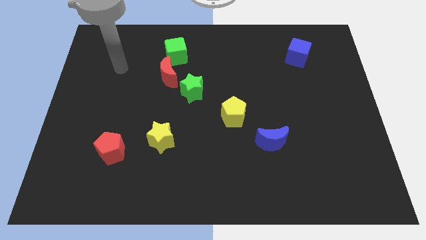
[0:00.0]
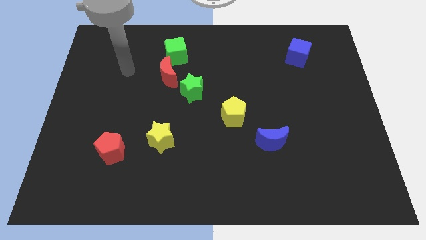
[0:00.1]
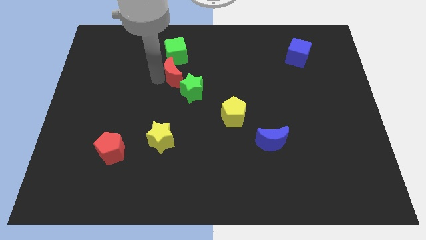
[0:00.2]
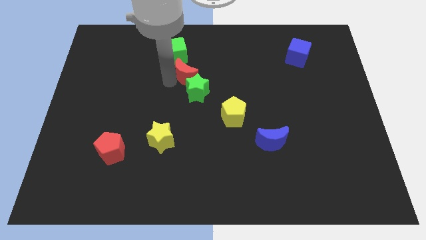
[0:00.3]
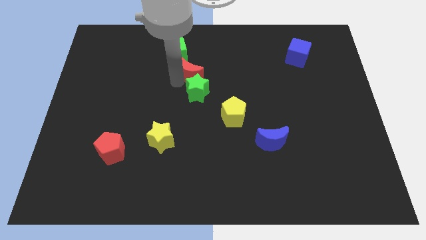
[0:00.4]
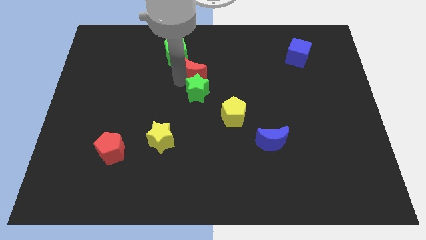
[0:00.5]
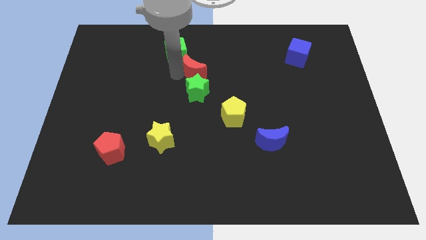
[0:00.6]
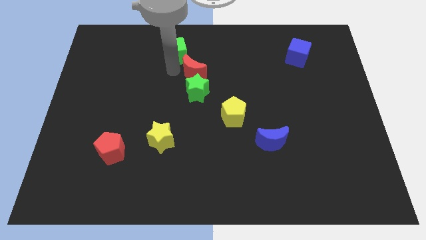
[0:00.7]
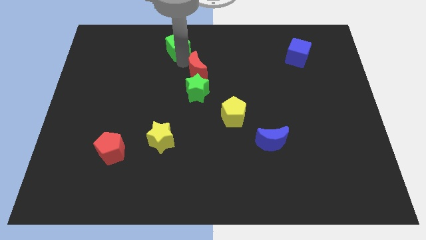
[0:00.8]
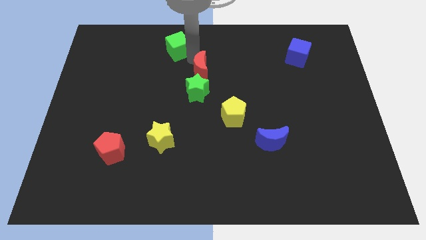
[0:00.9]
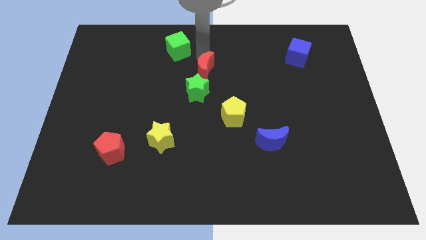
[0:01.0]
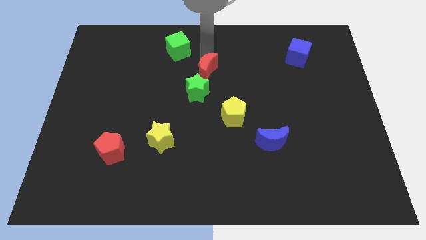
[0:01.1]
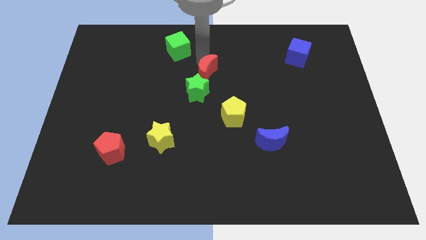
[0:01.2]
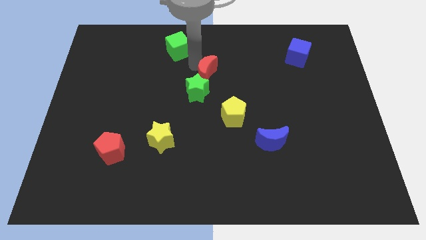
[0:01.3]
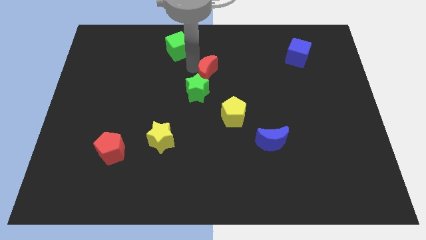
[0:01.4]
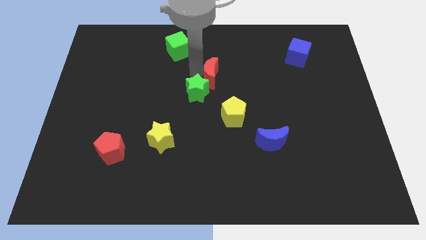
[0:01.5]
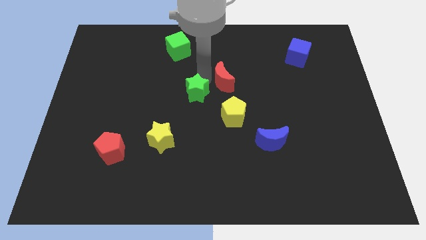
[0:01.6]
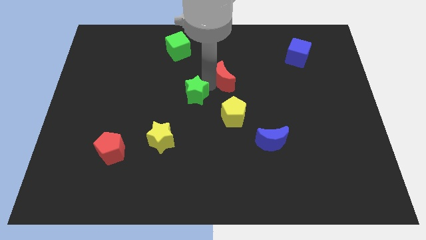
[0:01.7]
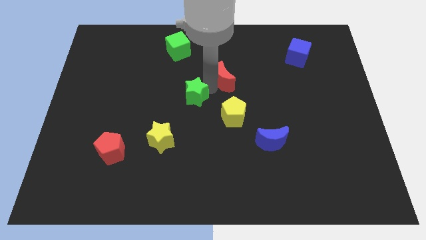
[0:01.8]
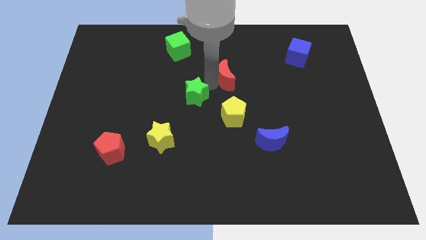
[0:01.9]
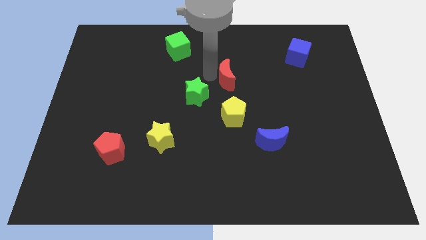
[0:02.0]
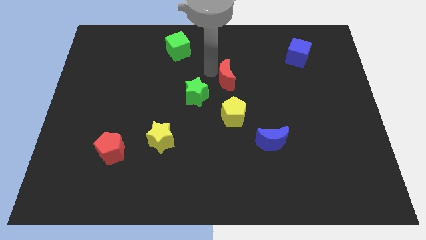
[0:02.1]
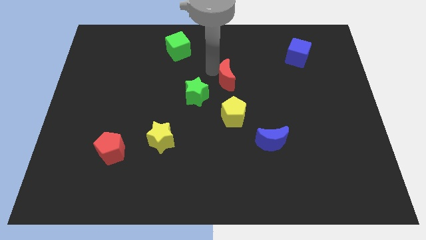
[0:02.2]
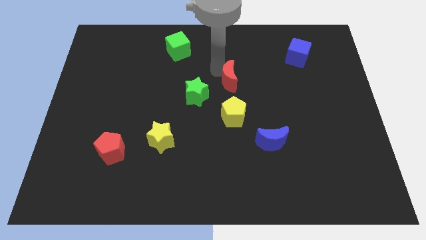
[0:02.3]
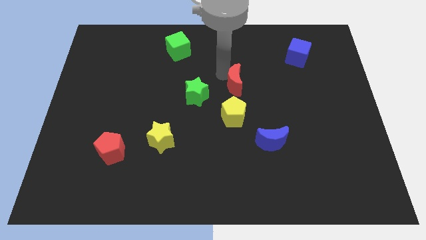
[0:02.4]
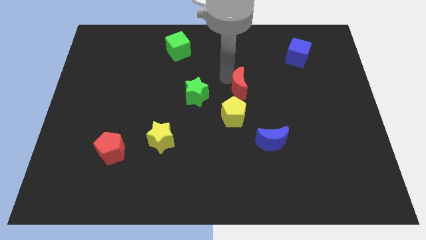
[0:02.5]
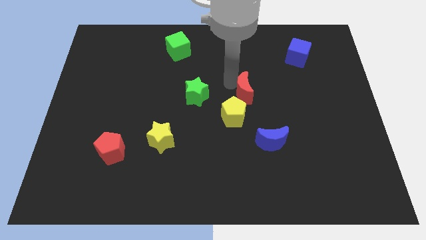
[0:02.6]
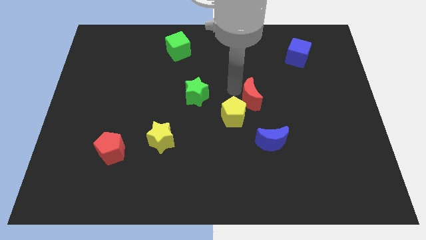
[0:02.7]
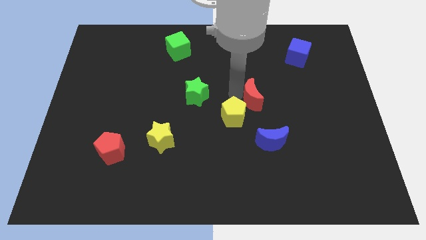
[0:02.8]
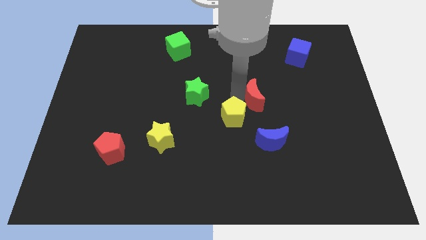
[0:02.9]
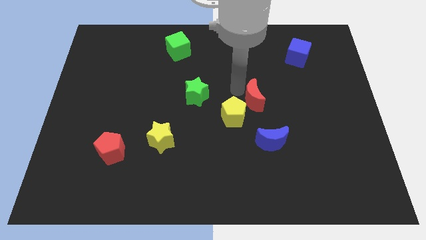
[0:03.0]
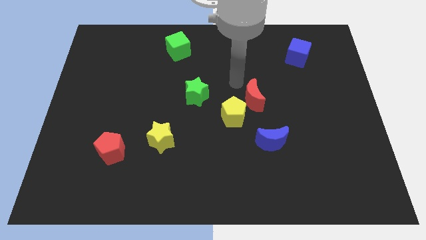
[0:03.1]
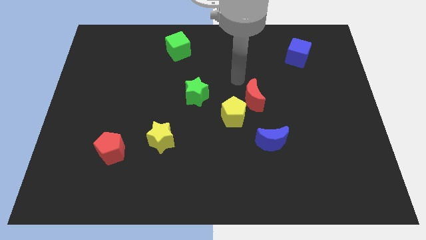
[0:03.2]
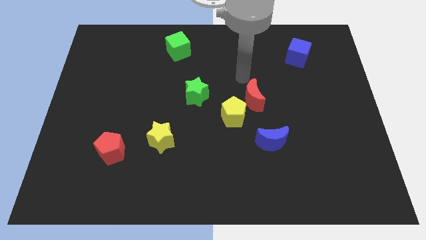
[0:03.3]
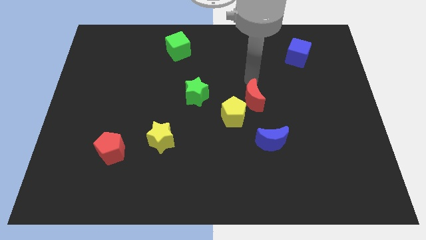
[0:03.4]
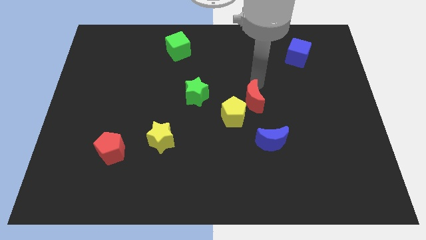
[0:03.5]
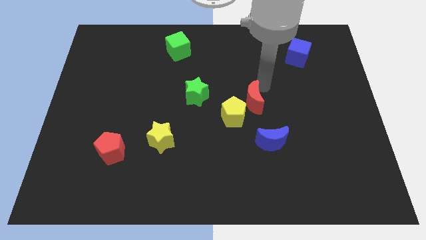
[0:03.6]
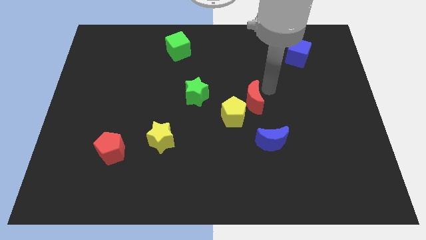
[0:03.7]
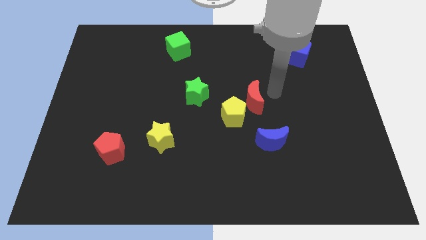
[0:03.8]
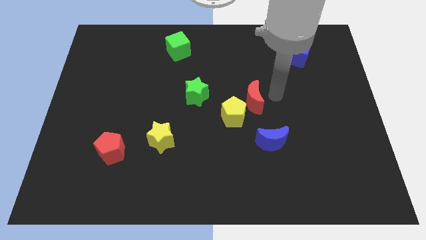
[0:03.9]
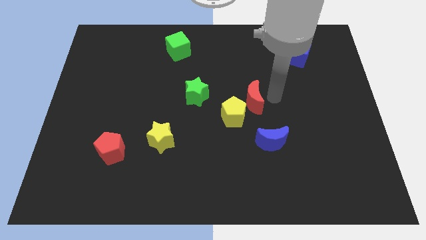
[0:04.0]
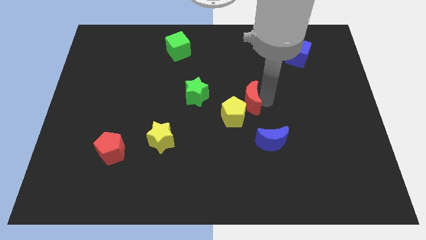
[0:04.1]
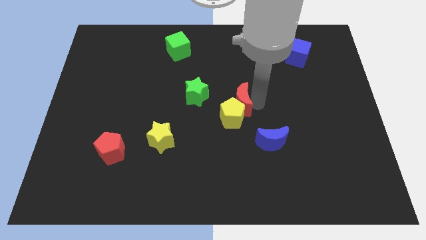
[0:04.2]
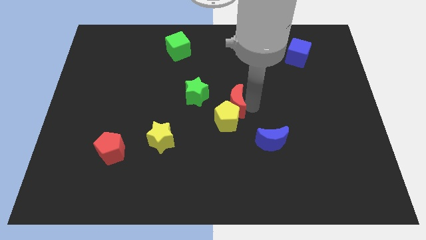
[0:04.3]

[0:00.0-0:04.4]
put the red moon towards the yellow pentagon

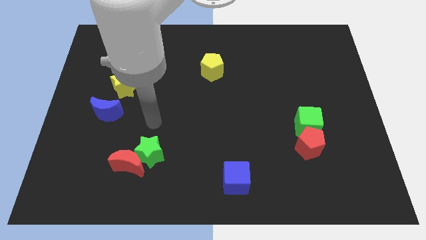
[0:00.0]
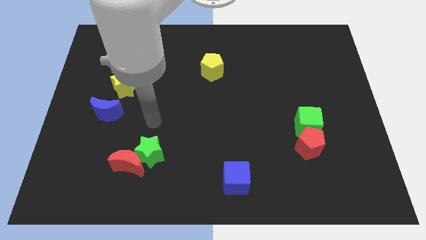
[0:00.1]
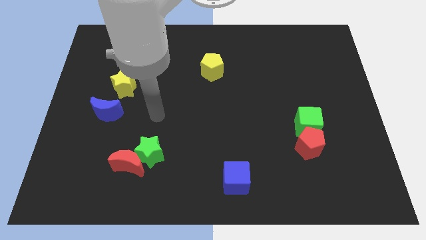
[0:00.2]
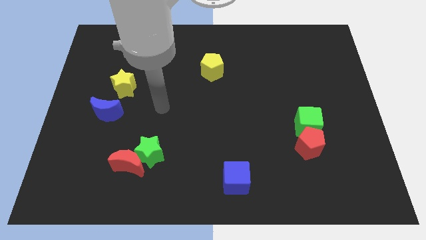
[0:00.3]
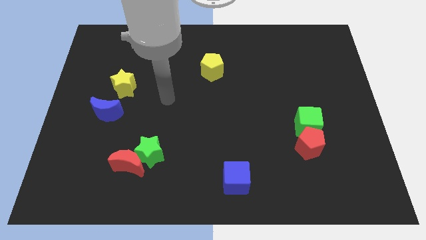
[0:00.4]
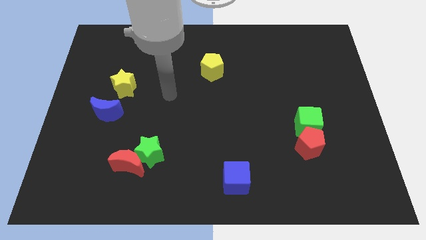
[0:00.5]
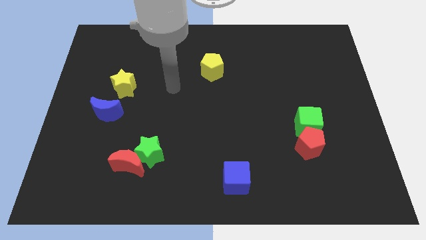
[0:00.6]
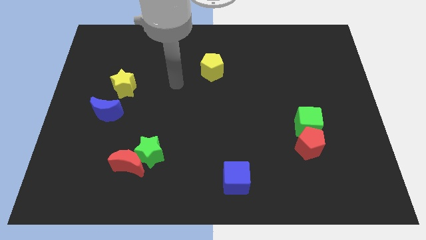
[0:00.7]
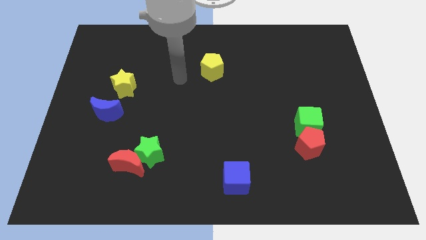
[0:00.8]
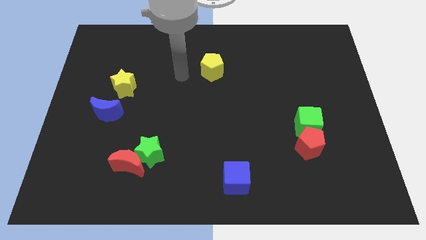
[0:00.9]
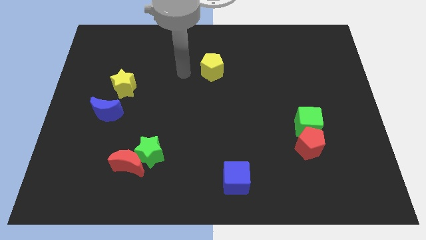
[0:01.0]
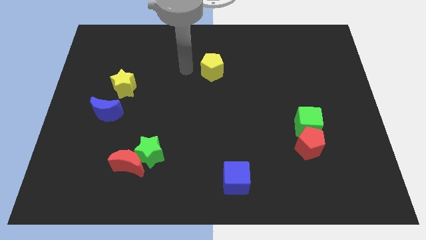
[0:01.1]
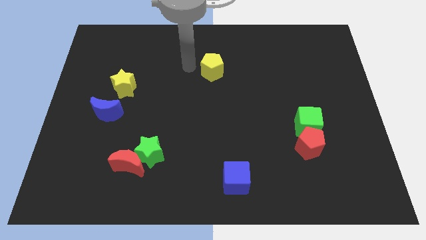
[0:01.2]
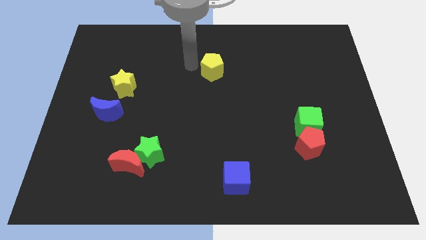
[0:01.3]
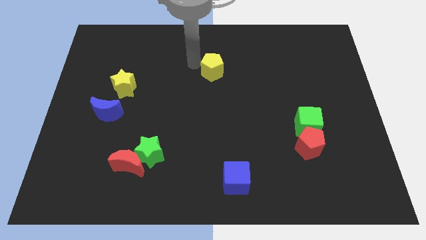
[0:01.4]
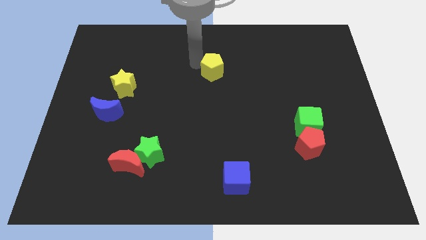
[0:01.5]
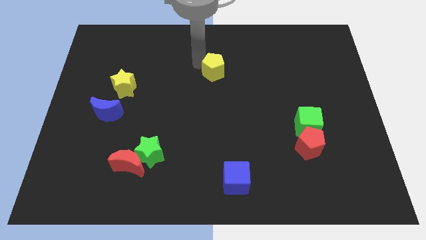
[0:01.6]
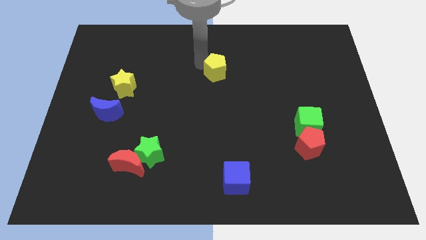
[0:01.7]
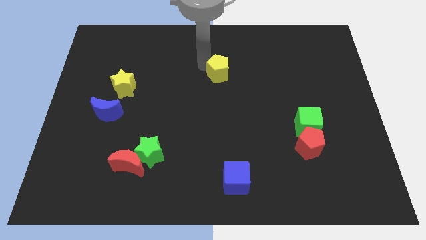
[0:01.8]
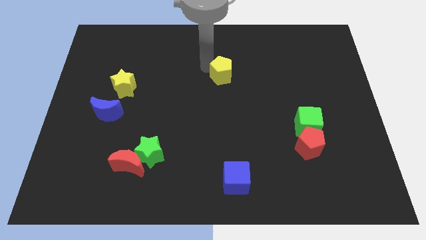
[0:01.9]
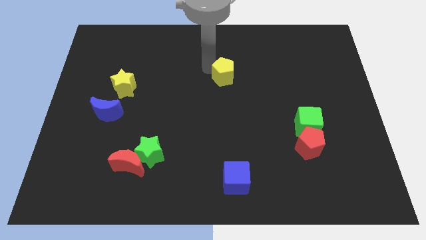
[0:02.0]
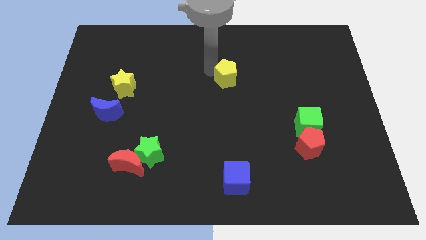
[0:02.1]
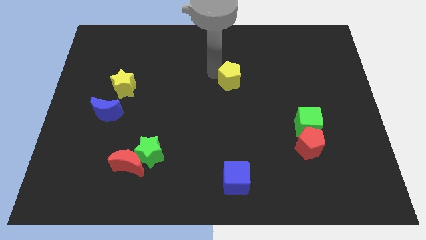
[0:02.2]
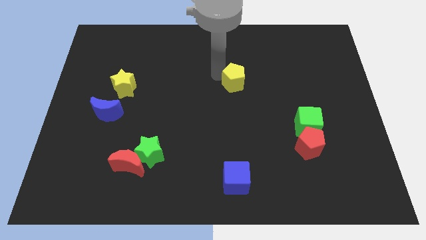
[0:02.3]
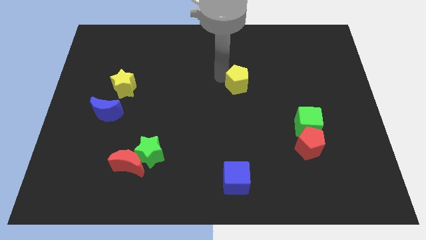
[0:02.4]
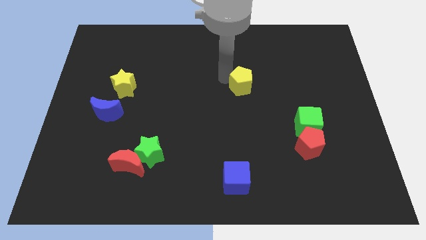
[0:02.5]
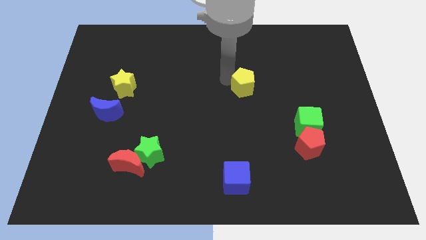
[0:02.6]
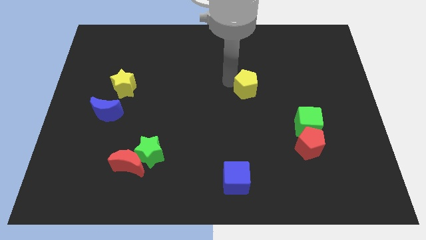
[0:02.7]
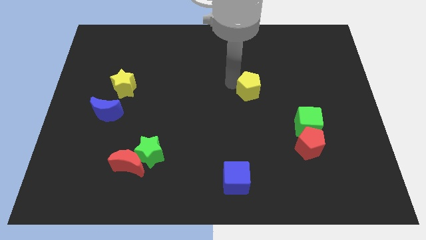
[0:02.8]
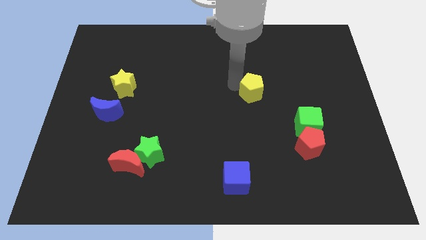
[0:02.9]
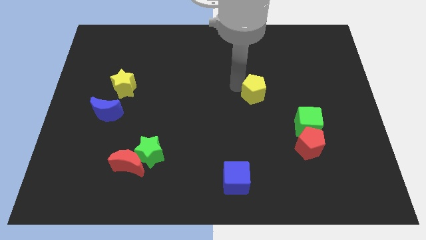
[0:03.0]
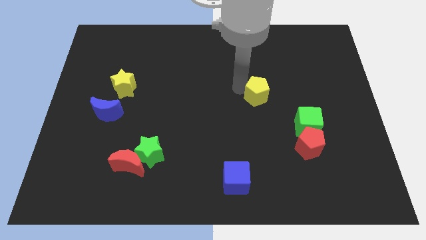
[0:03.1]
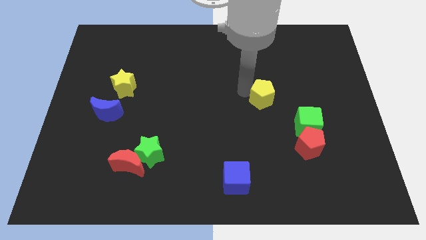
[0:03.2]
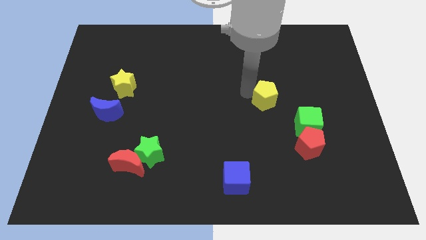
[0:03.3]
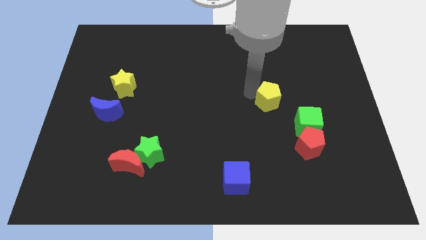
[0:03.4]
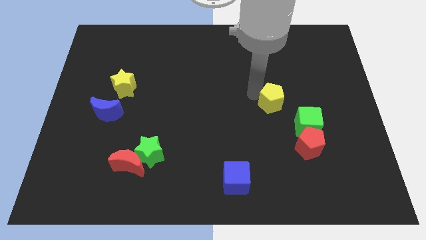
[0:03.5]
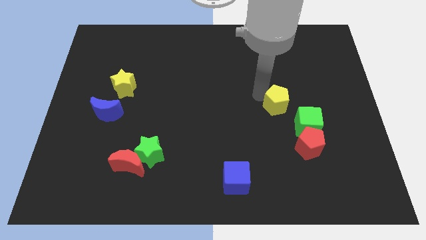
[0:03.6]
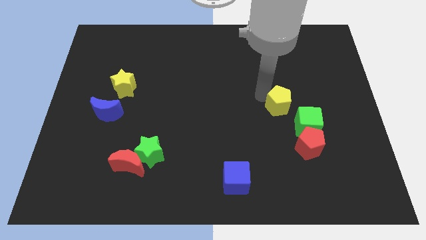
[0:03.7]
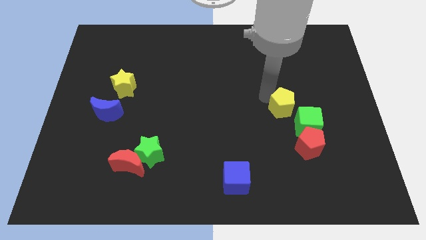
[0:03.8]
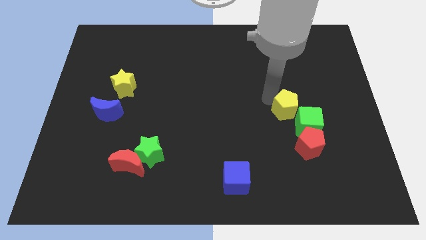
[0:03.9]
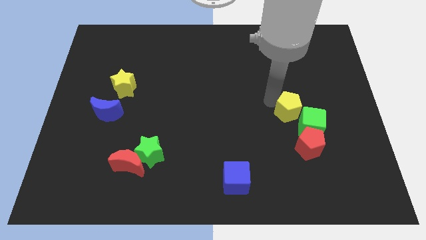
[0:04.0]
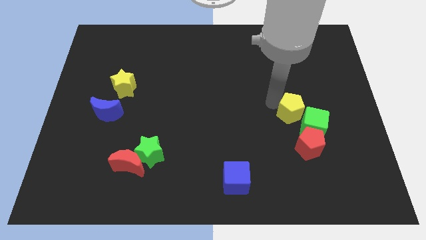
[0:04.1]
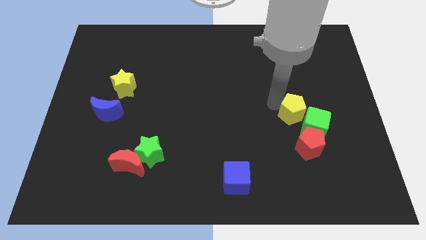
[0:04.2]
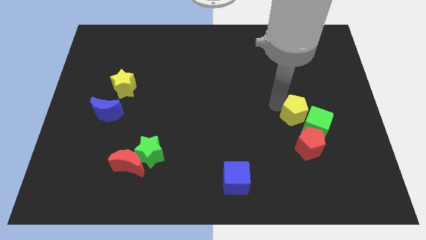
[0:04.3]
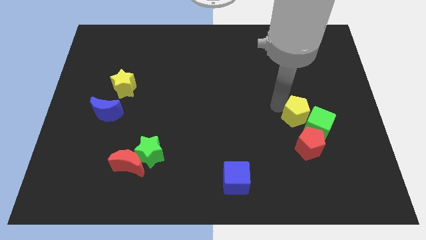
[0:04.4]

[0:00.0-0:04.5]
push the yellow pentagon close to the green cube
